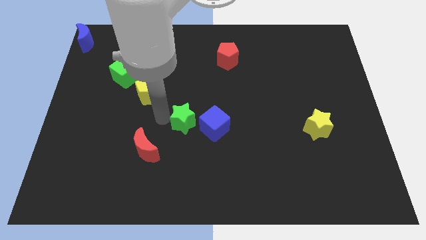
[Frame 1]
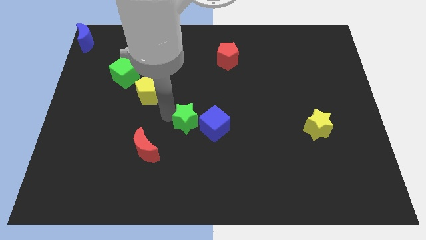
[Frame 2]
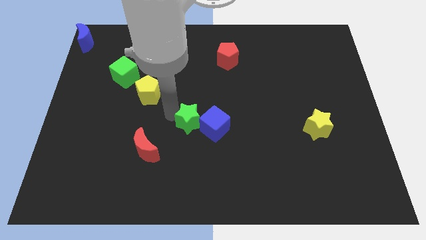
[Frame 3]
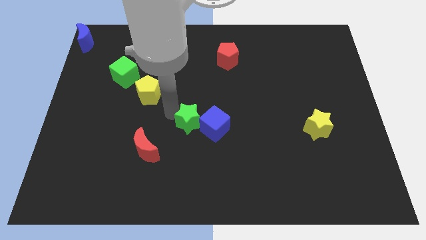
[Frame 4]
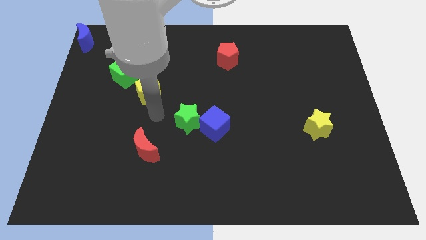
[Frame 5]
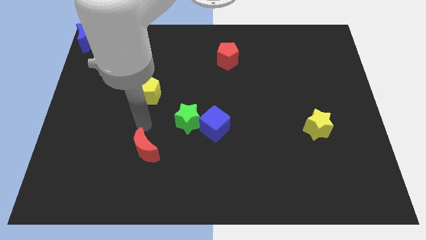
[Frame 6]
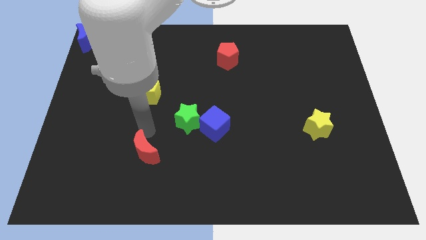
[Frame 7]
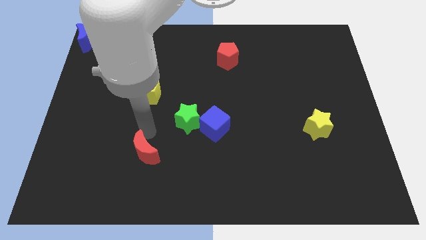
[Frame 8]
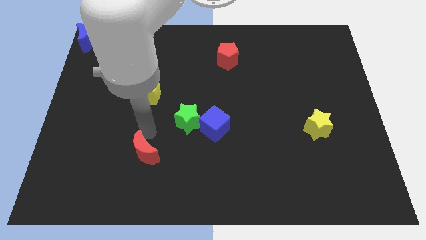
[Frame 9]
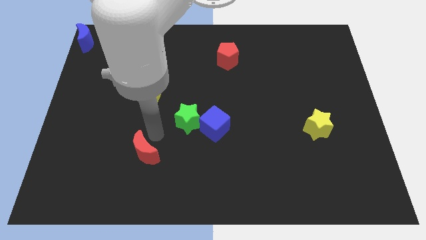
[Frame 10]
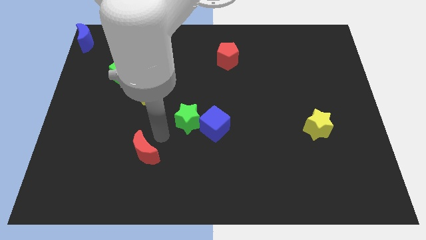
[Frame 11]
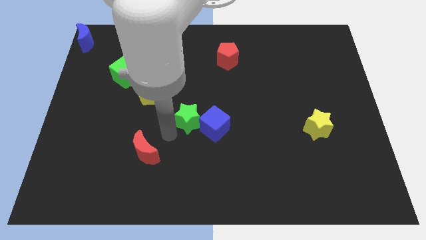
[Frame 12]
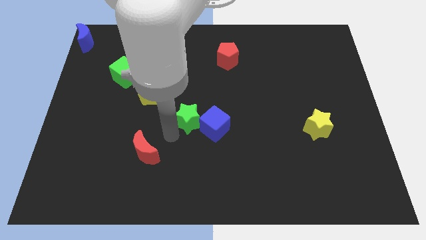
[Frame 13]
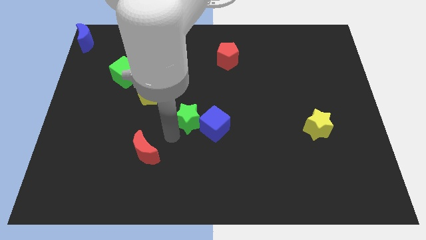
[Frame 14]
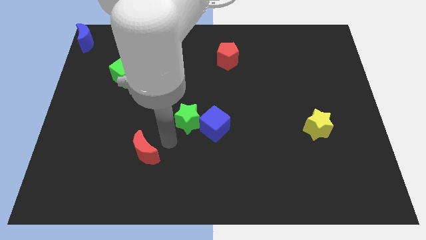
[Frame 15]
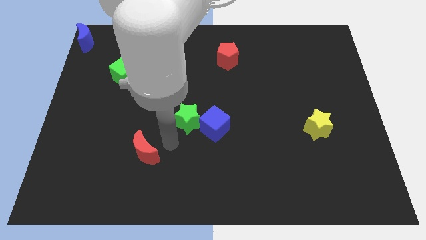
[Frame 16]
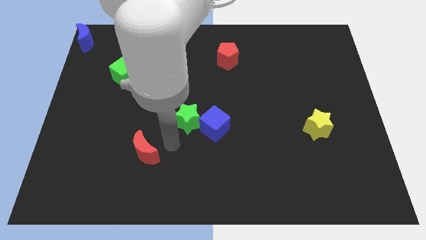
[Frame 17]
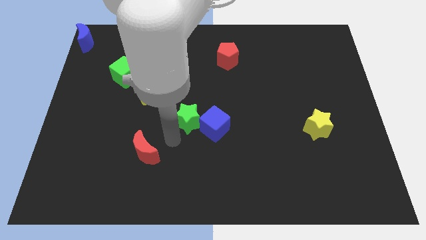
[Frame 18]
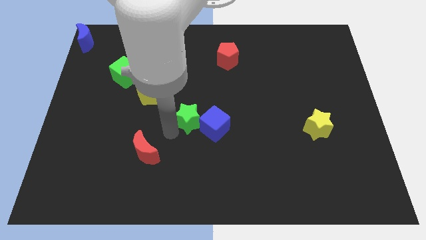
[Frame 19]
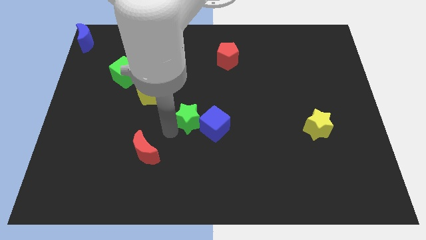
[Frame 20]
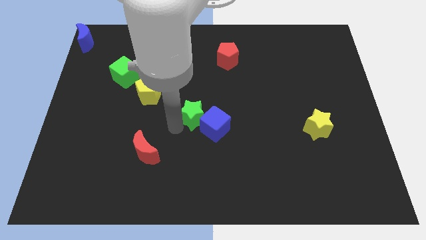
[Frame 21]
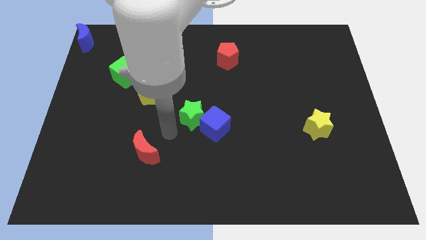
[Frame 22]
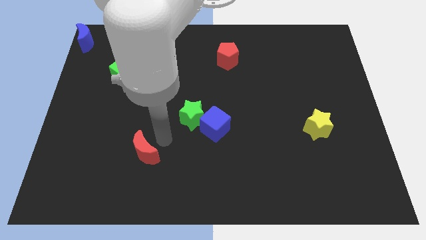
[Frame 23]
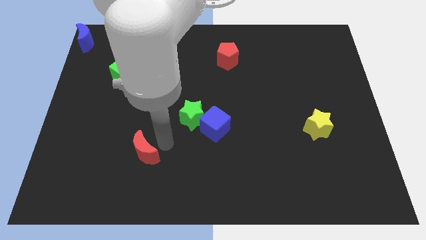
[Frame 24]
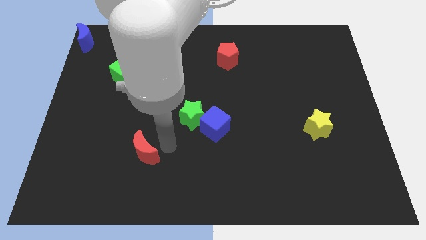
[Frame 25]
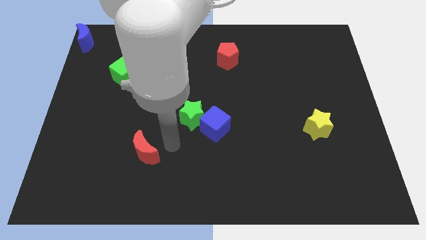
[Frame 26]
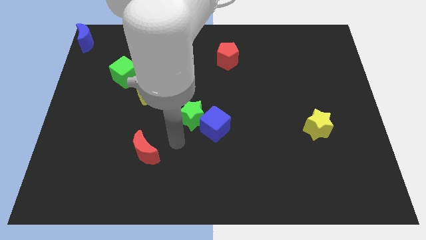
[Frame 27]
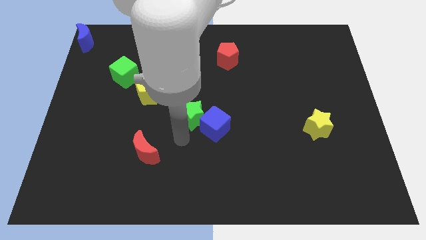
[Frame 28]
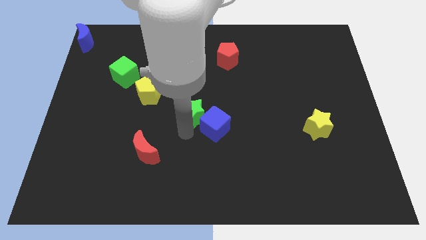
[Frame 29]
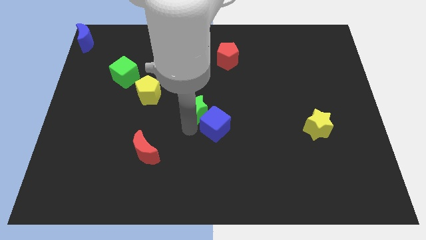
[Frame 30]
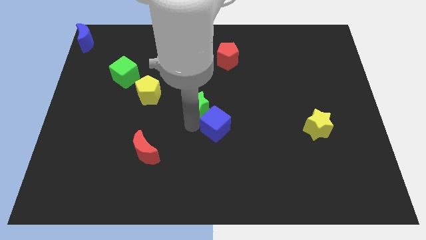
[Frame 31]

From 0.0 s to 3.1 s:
place the green star diagonally in between the yellow pentagon and blue cube

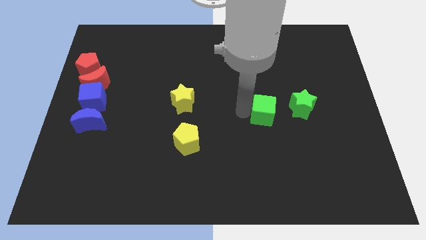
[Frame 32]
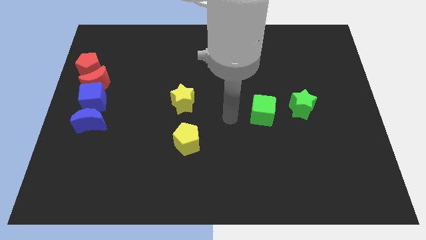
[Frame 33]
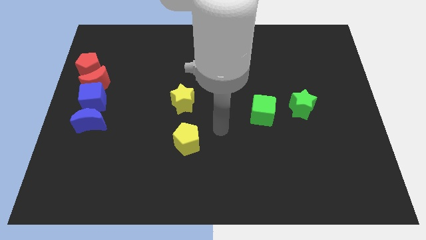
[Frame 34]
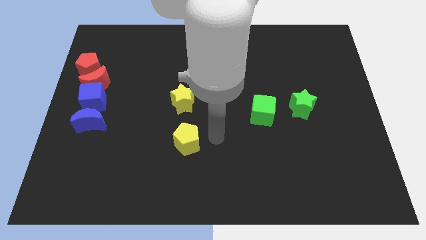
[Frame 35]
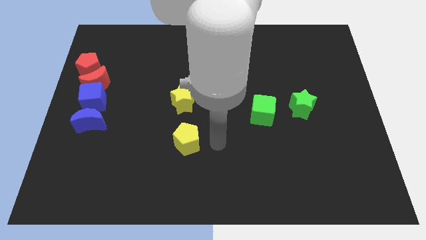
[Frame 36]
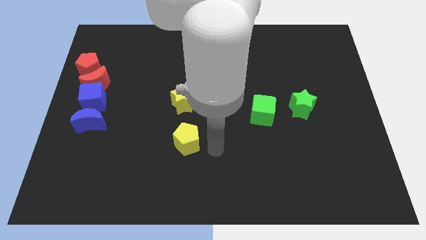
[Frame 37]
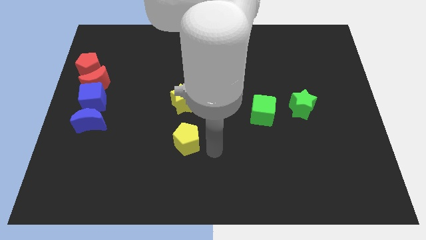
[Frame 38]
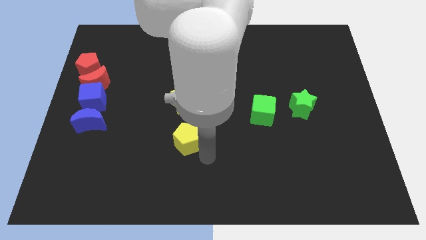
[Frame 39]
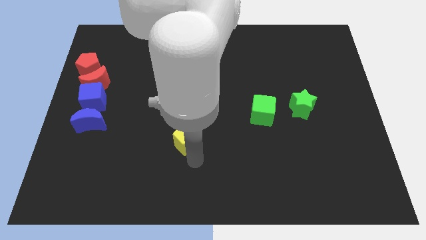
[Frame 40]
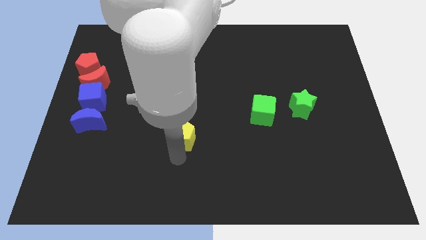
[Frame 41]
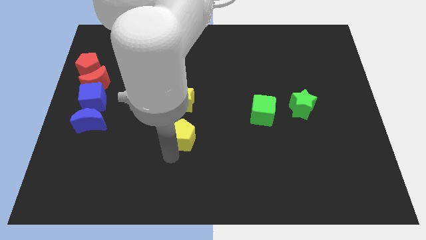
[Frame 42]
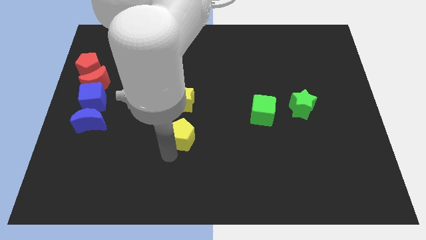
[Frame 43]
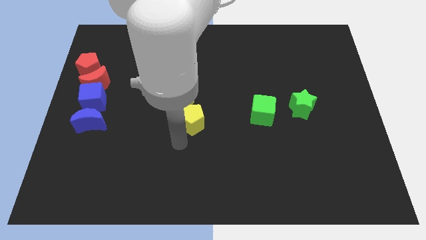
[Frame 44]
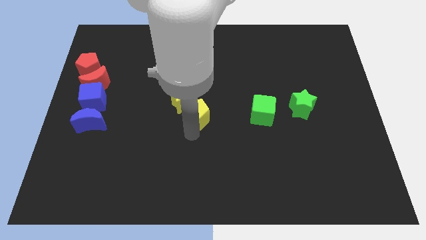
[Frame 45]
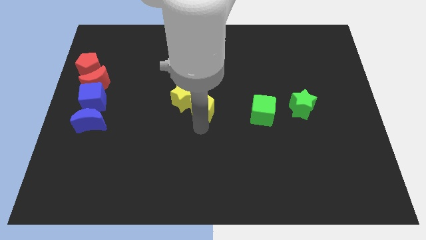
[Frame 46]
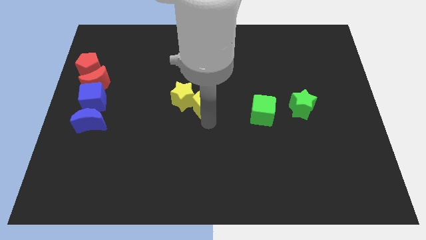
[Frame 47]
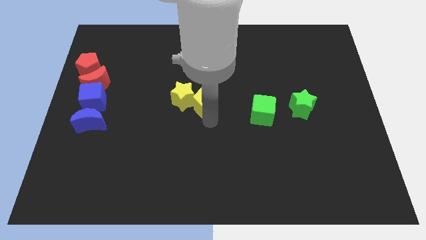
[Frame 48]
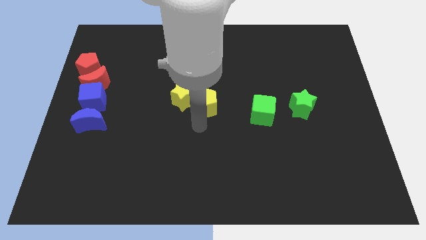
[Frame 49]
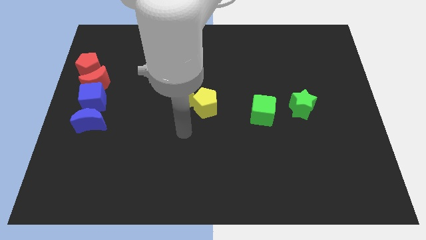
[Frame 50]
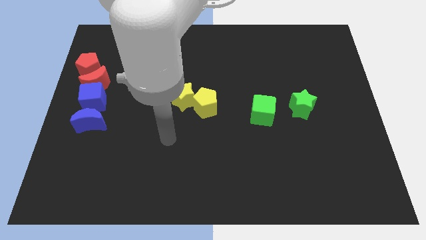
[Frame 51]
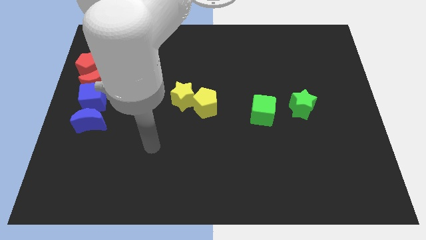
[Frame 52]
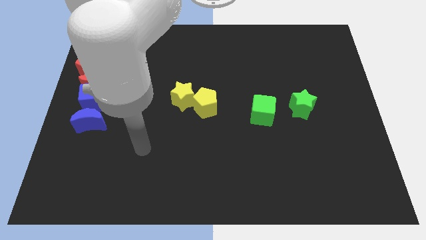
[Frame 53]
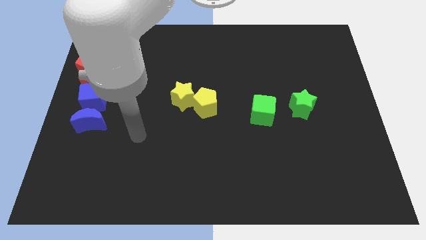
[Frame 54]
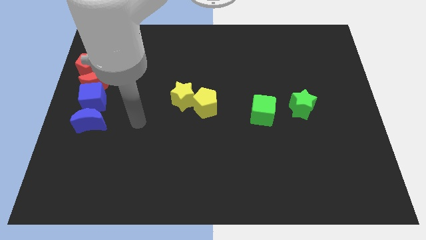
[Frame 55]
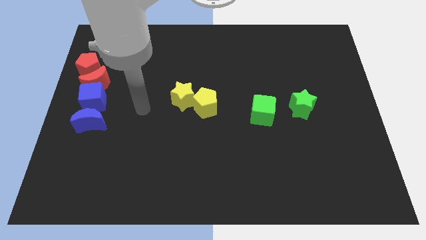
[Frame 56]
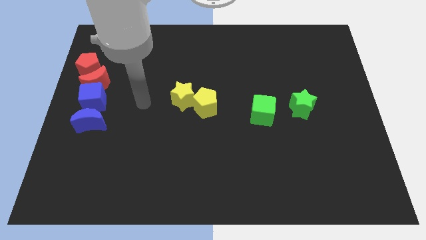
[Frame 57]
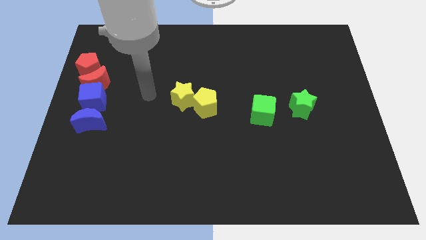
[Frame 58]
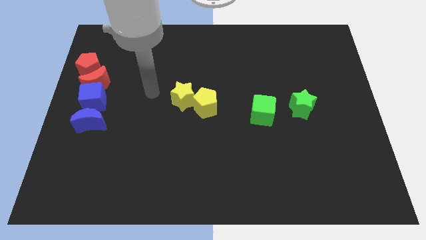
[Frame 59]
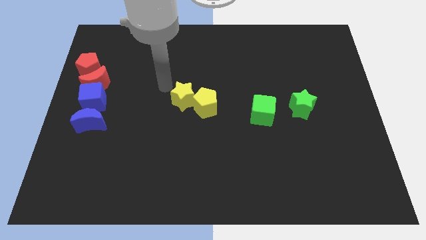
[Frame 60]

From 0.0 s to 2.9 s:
drag the yellow pentagon into the right side of the yellow star

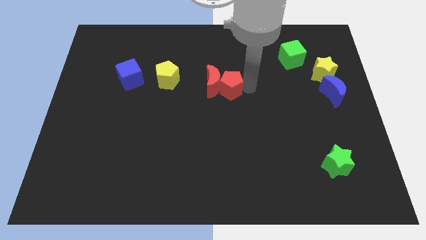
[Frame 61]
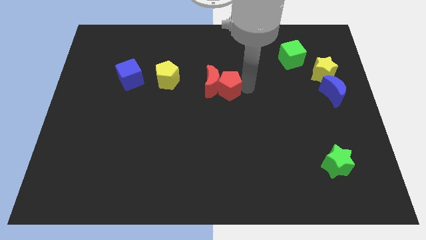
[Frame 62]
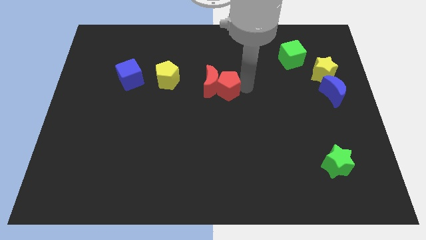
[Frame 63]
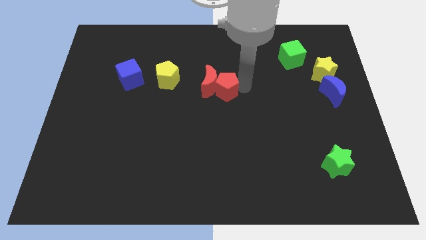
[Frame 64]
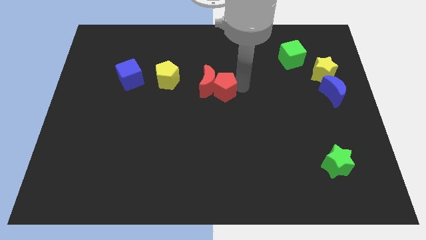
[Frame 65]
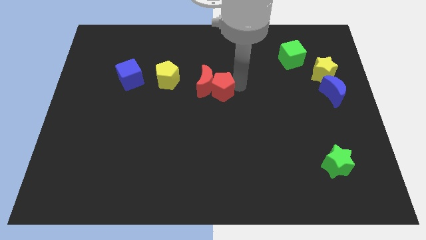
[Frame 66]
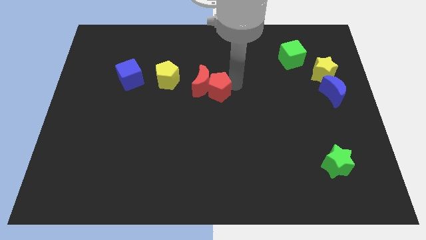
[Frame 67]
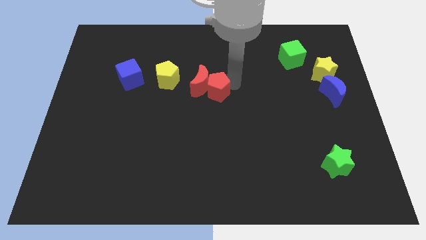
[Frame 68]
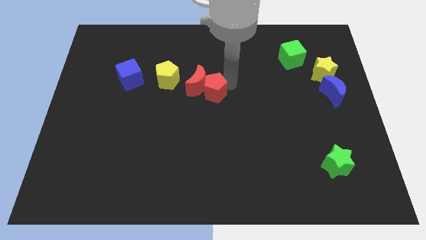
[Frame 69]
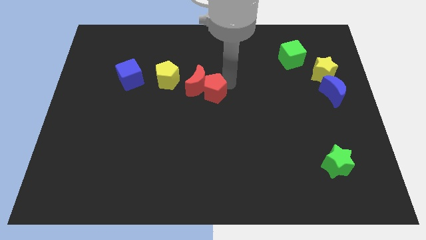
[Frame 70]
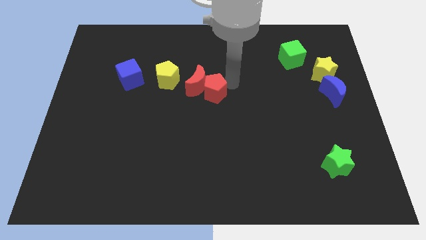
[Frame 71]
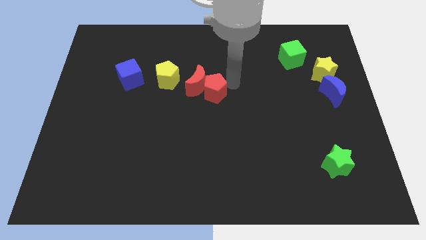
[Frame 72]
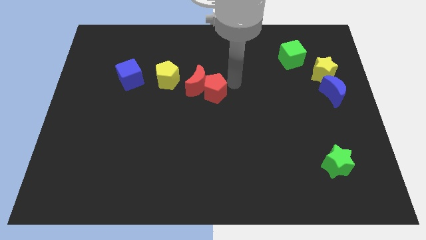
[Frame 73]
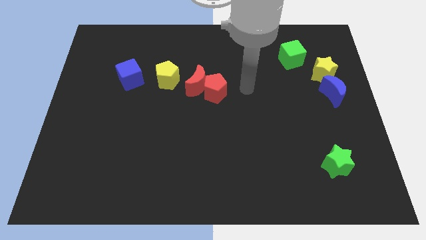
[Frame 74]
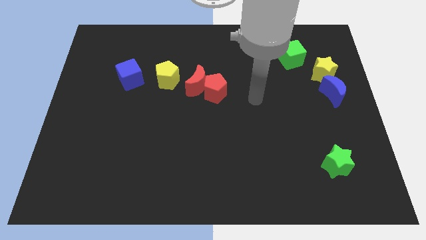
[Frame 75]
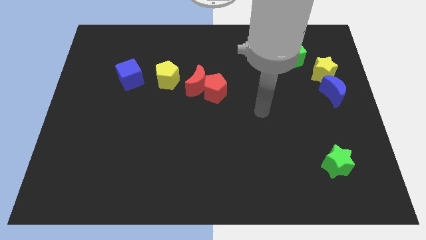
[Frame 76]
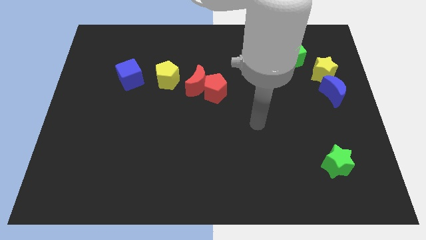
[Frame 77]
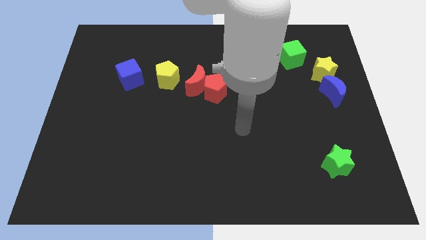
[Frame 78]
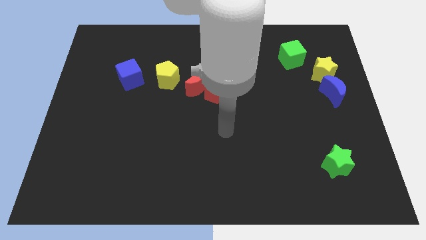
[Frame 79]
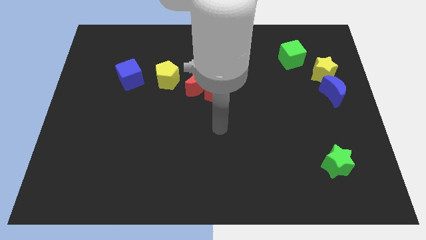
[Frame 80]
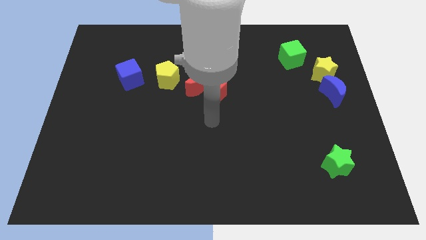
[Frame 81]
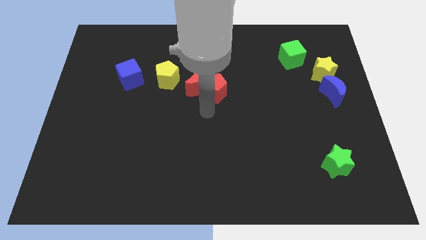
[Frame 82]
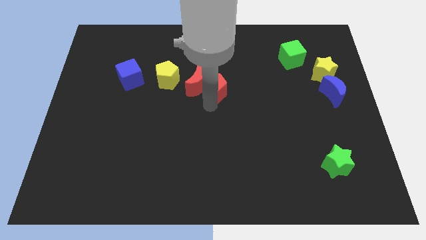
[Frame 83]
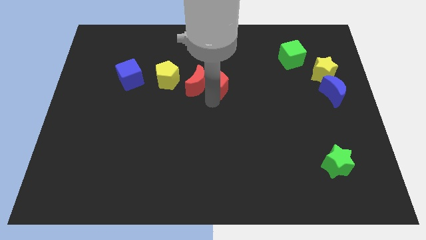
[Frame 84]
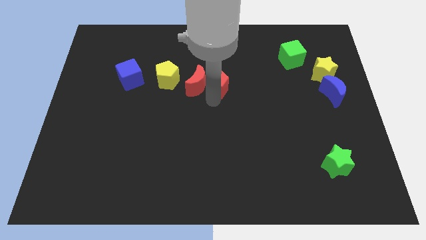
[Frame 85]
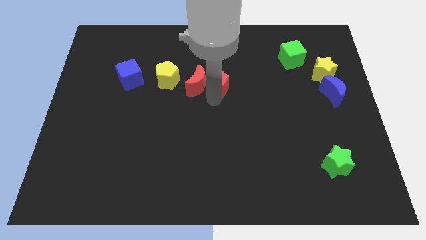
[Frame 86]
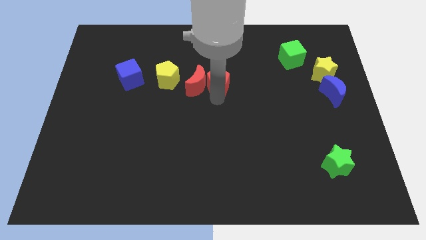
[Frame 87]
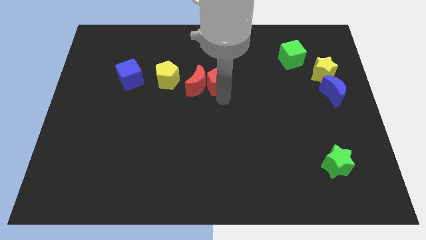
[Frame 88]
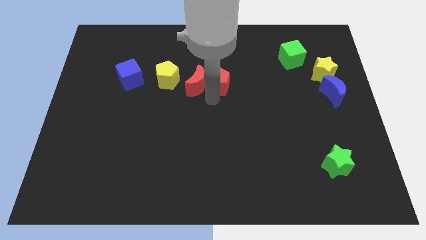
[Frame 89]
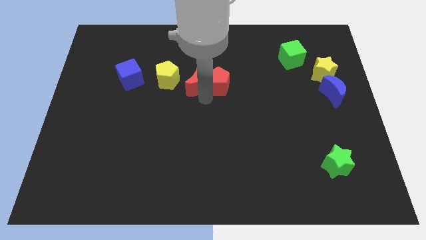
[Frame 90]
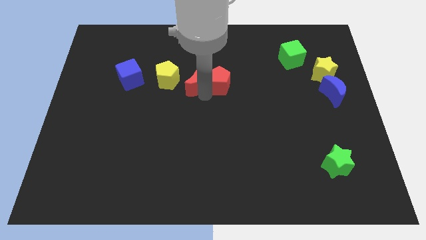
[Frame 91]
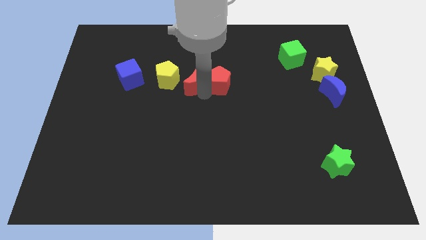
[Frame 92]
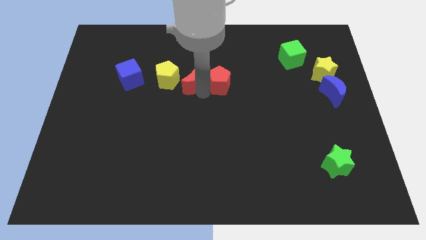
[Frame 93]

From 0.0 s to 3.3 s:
push red pentagon and red moon towards left
